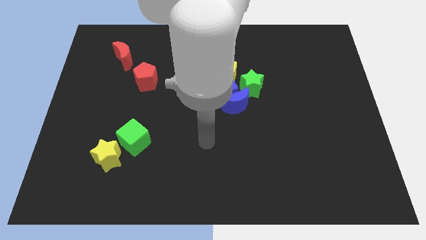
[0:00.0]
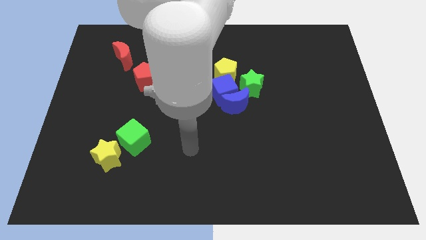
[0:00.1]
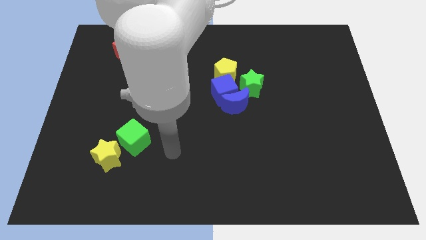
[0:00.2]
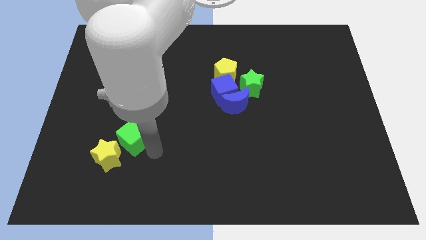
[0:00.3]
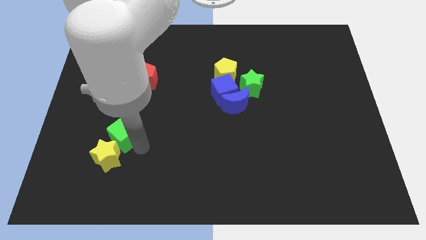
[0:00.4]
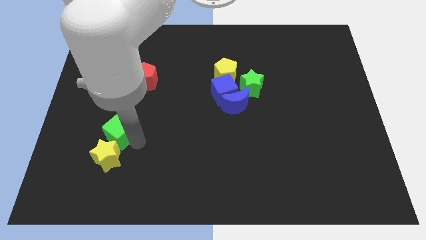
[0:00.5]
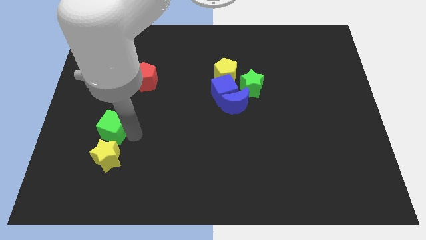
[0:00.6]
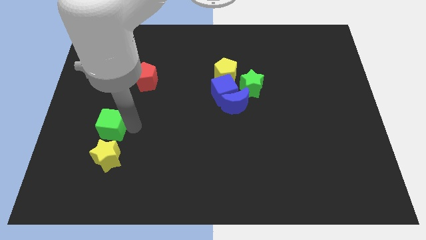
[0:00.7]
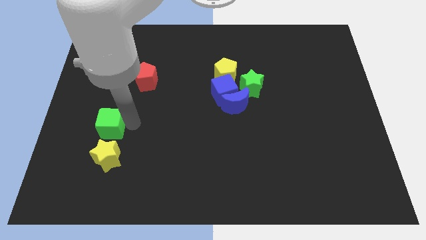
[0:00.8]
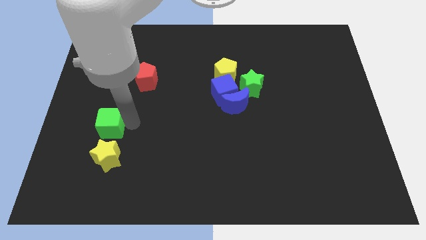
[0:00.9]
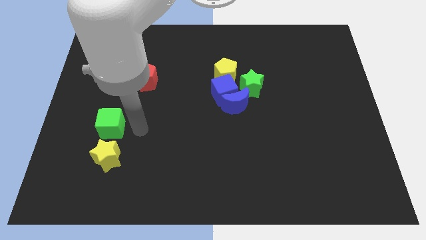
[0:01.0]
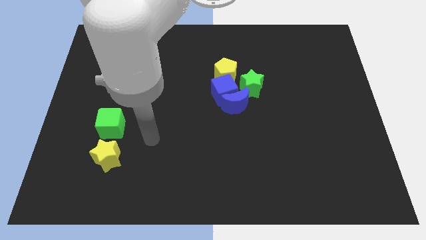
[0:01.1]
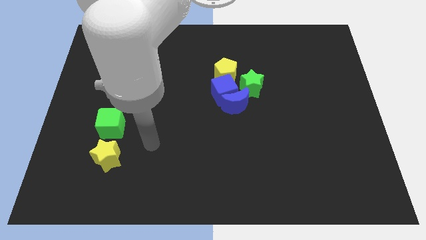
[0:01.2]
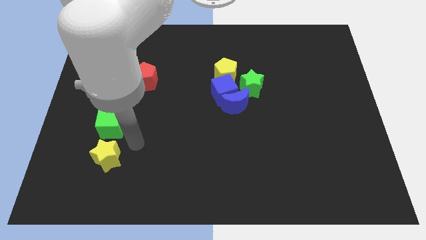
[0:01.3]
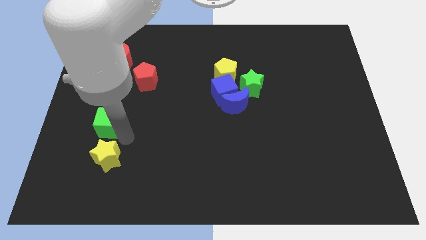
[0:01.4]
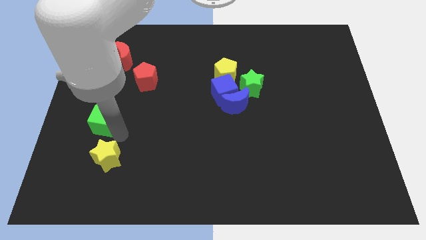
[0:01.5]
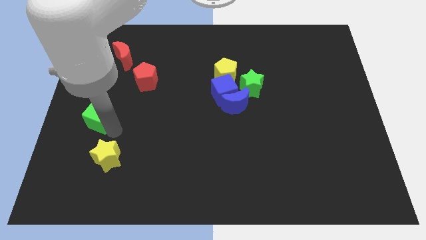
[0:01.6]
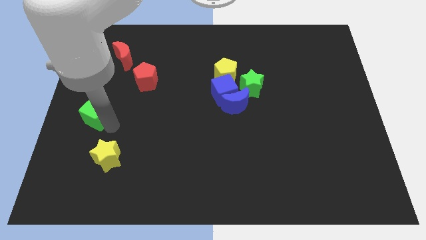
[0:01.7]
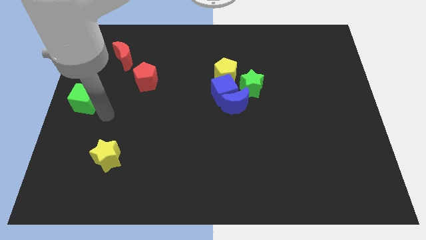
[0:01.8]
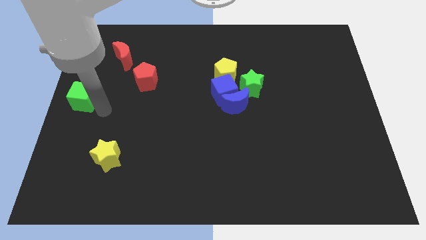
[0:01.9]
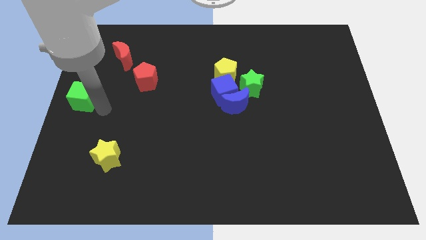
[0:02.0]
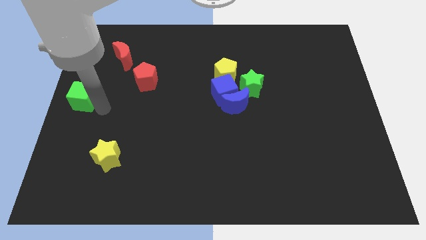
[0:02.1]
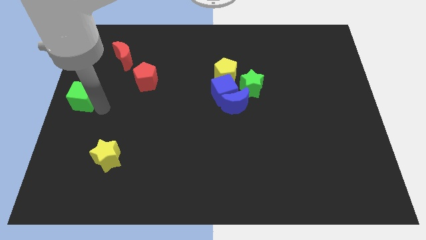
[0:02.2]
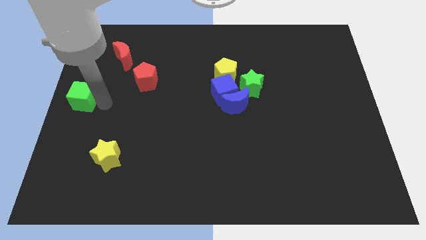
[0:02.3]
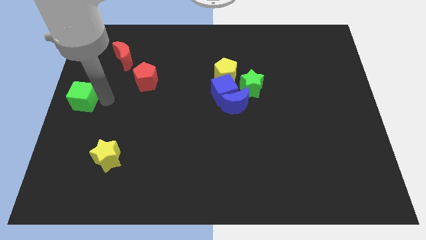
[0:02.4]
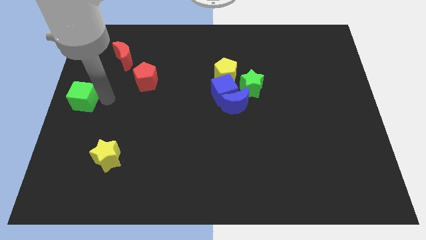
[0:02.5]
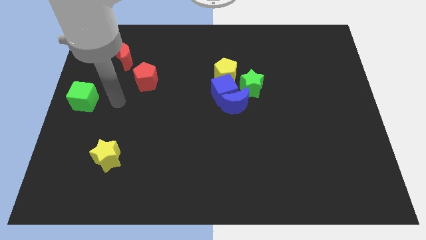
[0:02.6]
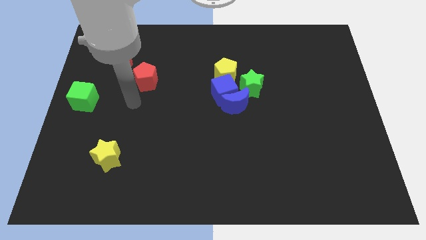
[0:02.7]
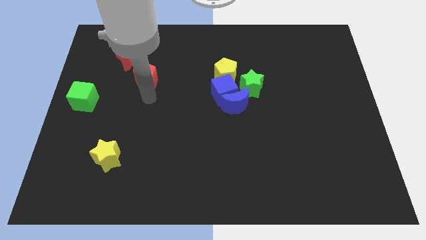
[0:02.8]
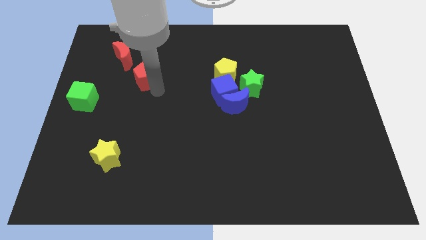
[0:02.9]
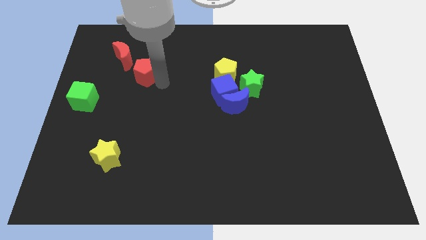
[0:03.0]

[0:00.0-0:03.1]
put the green cube at the center left side of the board

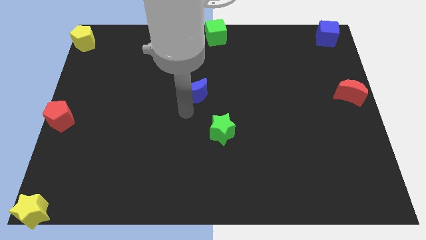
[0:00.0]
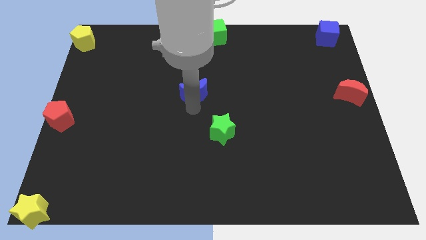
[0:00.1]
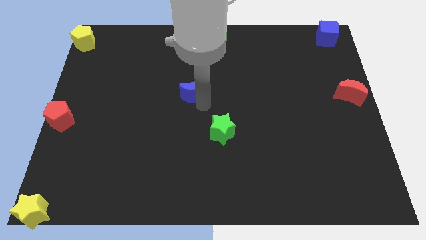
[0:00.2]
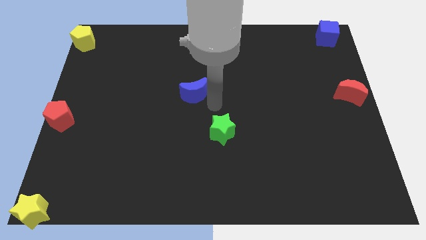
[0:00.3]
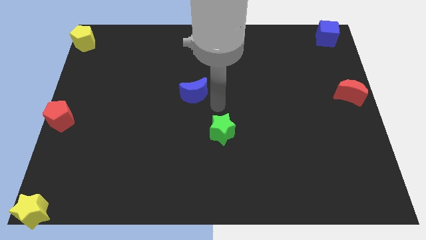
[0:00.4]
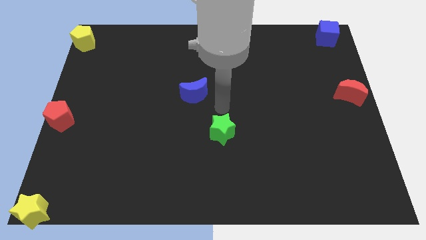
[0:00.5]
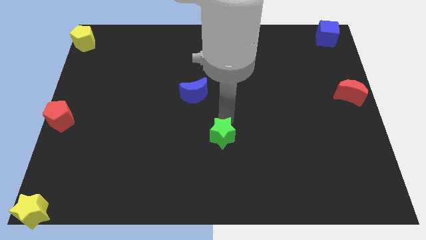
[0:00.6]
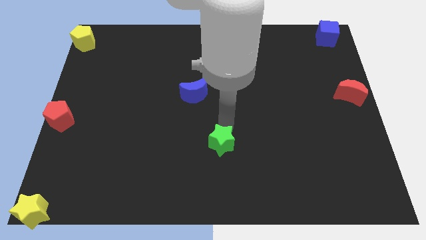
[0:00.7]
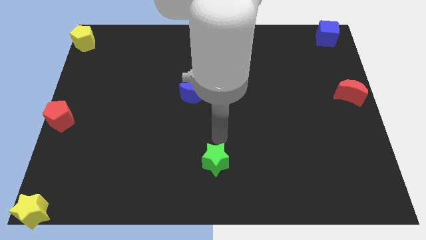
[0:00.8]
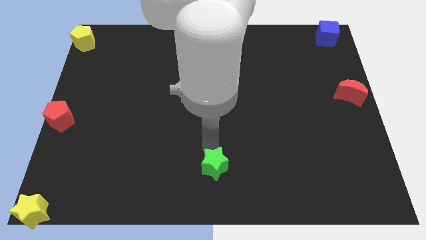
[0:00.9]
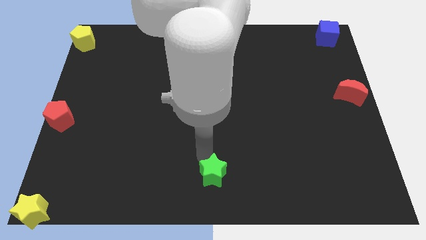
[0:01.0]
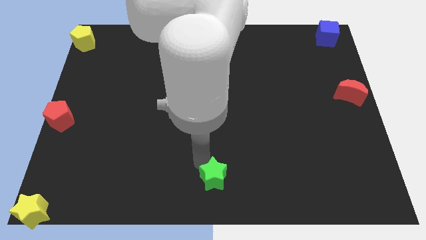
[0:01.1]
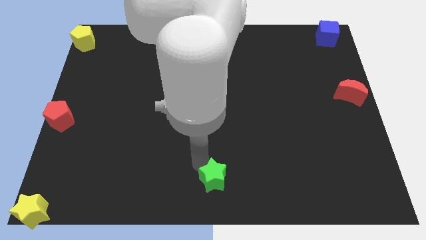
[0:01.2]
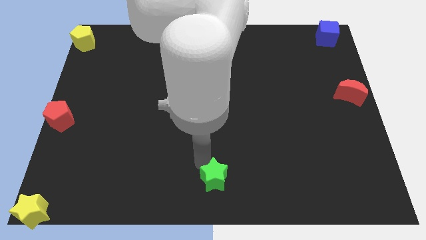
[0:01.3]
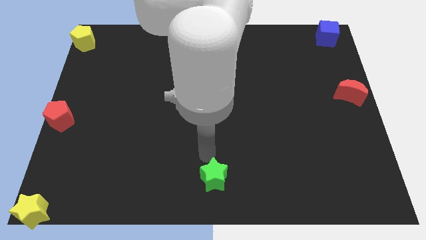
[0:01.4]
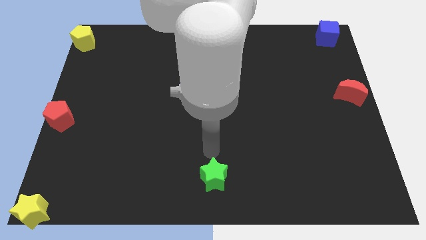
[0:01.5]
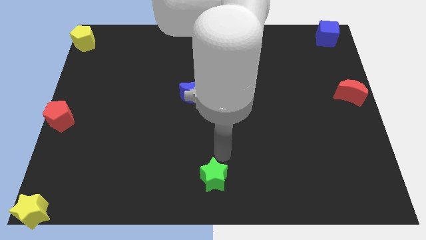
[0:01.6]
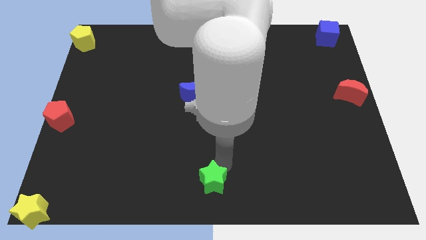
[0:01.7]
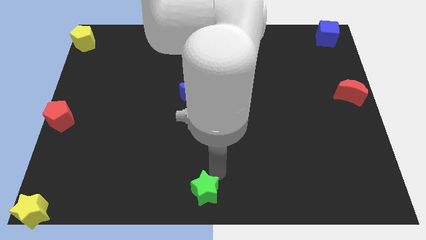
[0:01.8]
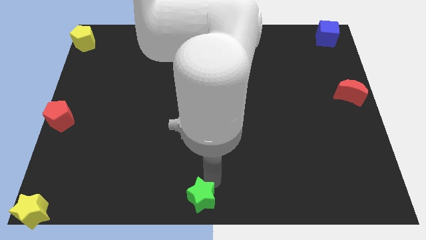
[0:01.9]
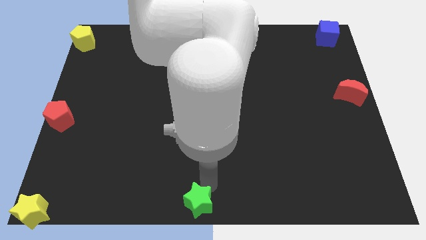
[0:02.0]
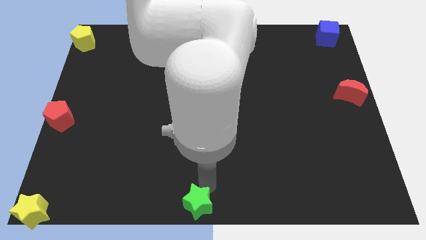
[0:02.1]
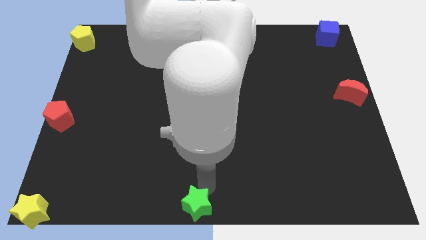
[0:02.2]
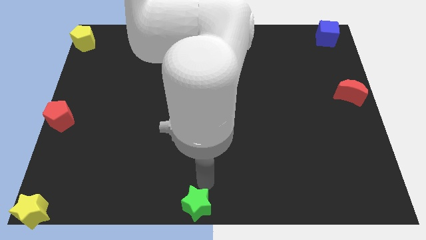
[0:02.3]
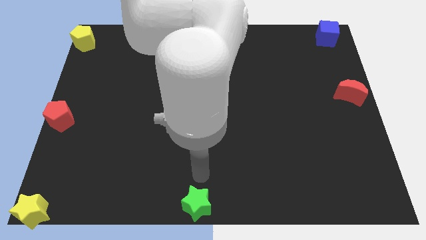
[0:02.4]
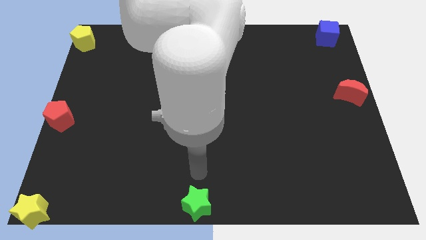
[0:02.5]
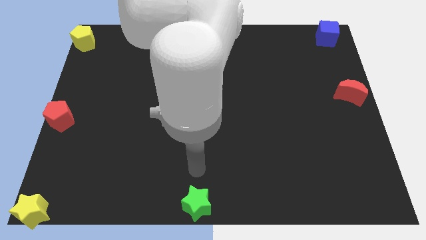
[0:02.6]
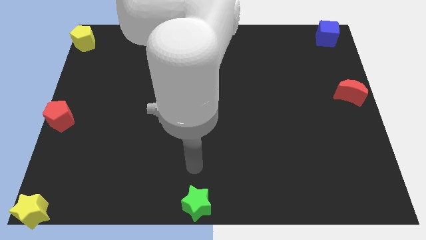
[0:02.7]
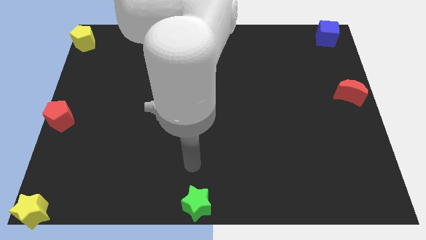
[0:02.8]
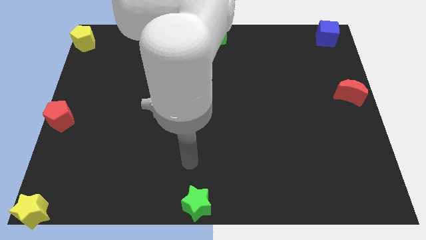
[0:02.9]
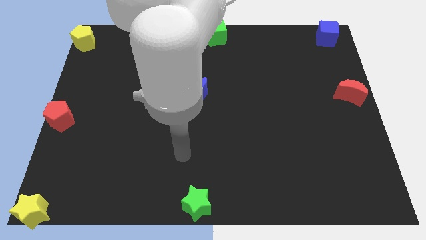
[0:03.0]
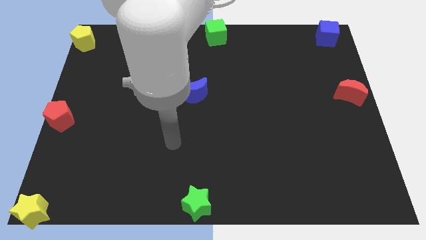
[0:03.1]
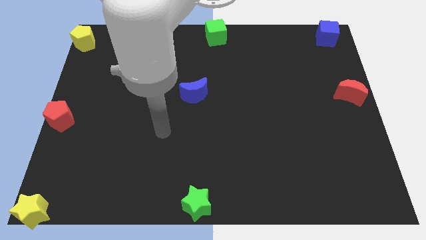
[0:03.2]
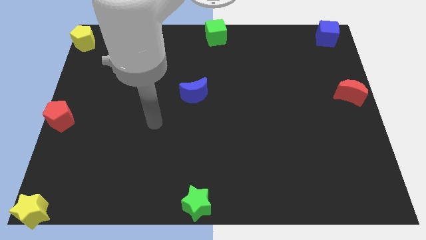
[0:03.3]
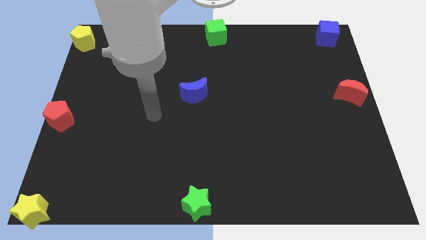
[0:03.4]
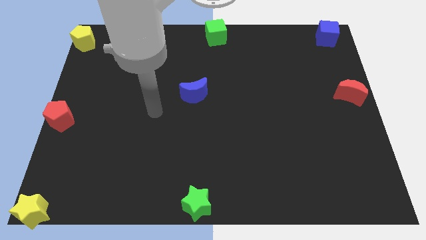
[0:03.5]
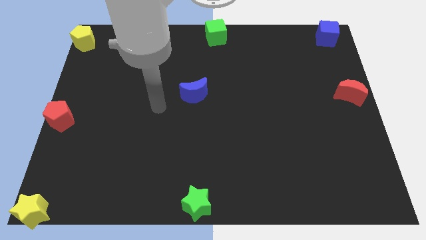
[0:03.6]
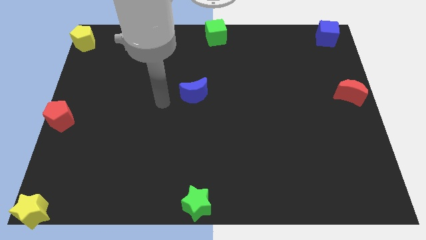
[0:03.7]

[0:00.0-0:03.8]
push the green star to the bottom center of the board

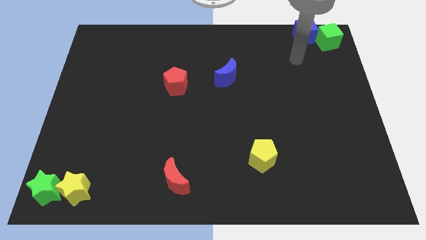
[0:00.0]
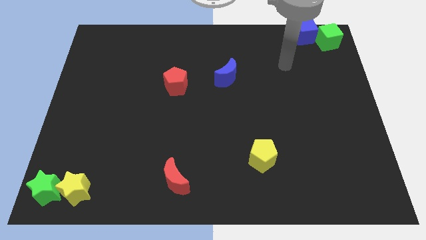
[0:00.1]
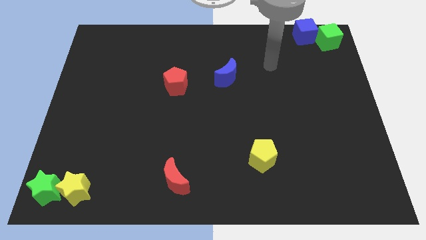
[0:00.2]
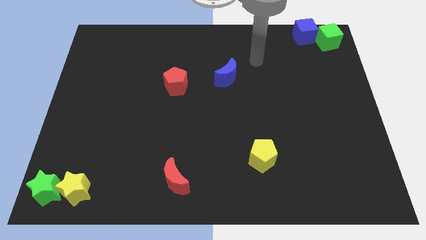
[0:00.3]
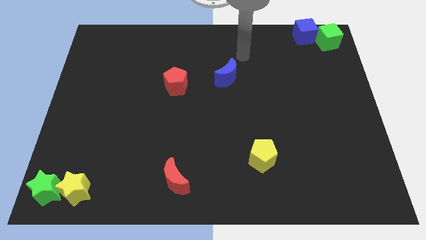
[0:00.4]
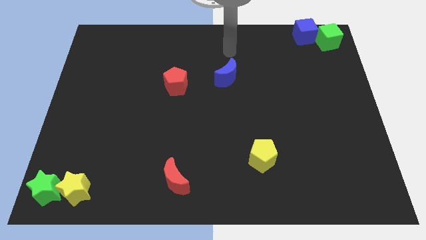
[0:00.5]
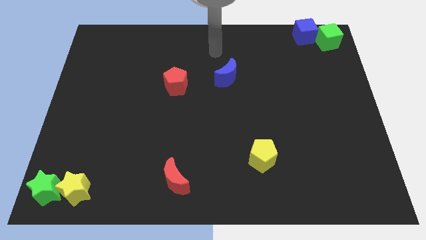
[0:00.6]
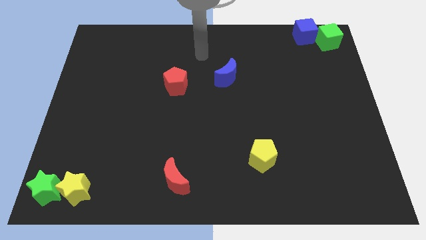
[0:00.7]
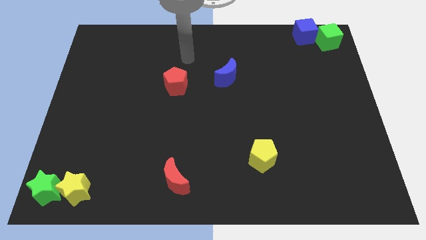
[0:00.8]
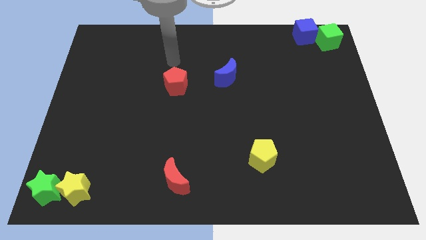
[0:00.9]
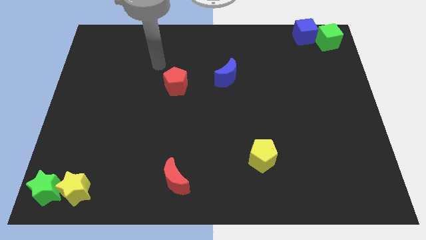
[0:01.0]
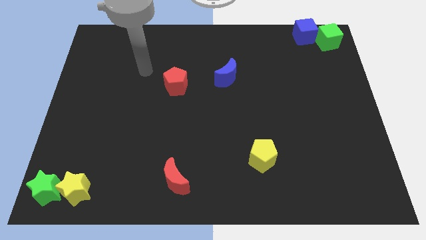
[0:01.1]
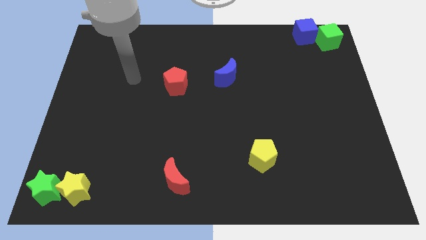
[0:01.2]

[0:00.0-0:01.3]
point your hand at the left side of the red pentagon

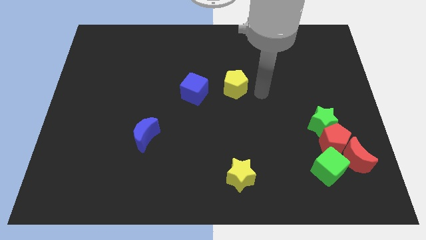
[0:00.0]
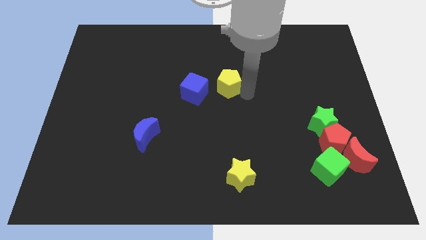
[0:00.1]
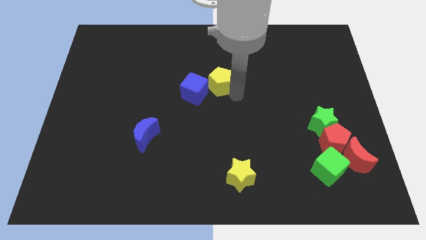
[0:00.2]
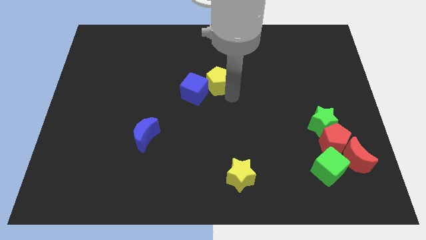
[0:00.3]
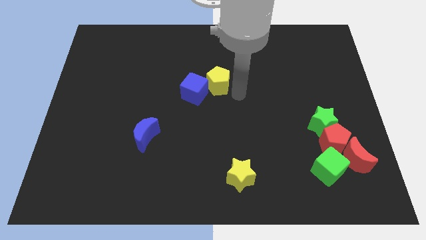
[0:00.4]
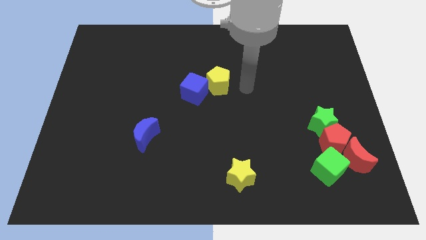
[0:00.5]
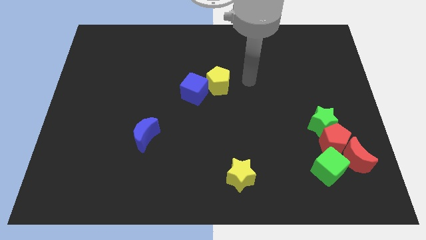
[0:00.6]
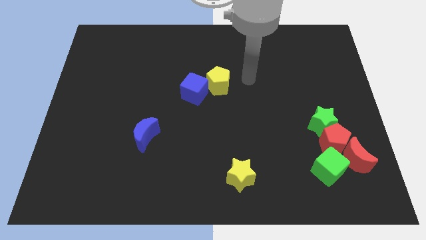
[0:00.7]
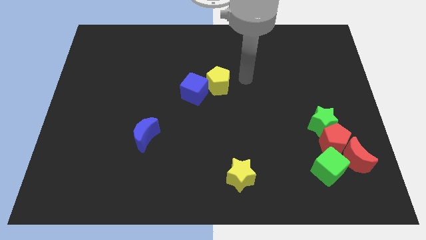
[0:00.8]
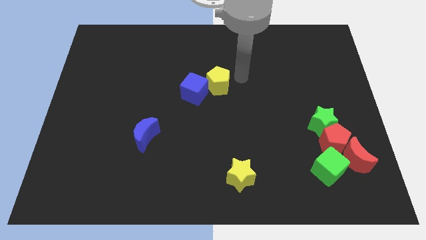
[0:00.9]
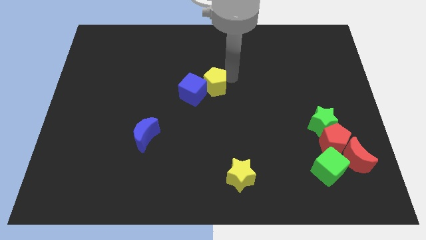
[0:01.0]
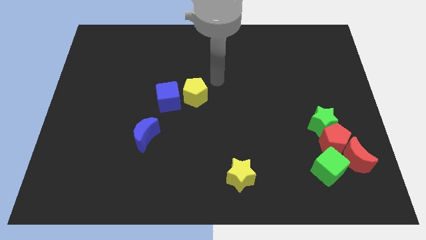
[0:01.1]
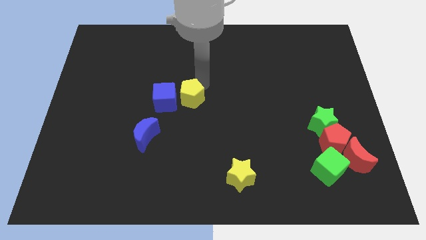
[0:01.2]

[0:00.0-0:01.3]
push yellow pentagon into the blue cube
